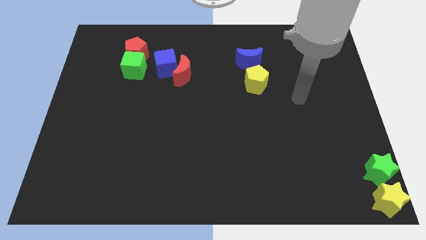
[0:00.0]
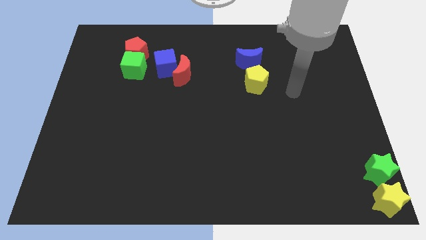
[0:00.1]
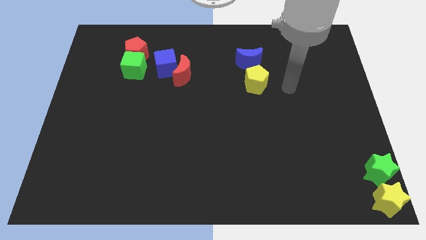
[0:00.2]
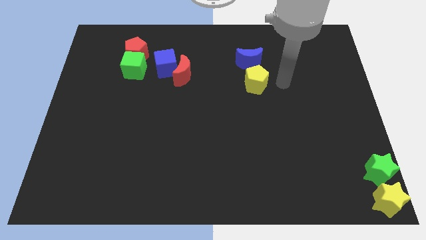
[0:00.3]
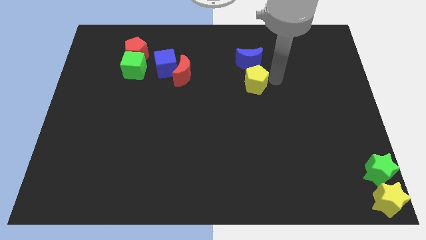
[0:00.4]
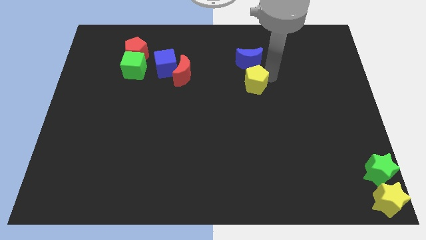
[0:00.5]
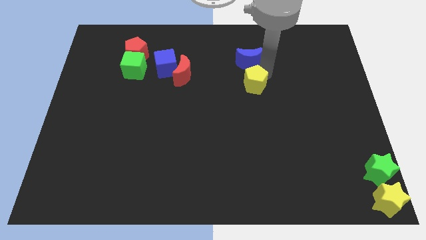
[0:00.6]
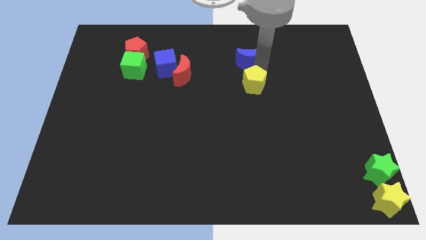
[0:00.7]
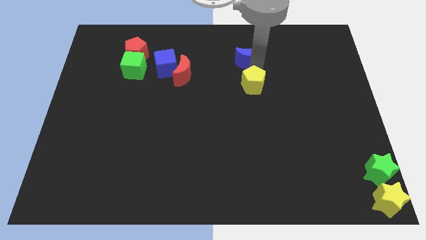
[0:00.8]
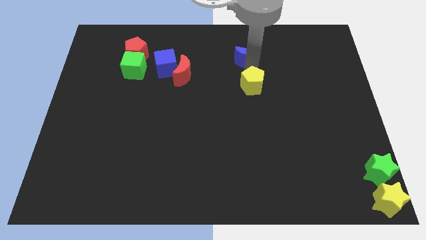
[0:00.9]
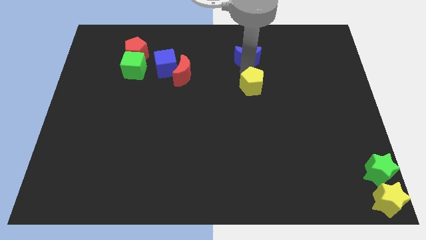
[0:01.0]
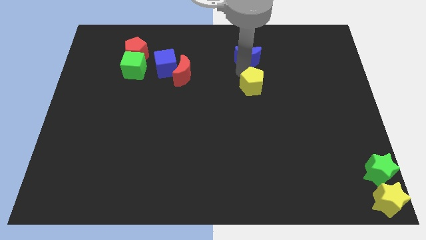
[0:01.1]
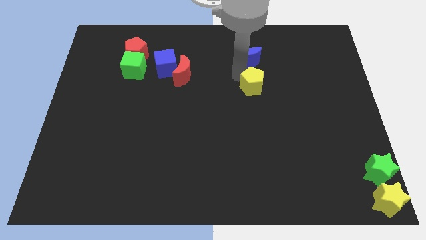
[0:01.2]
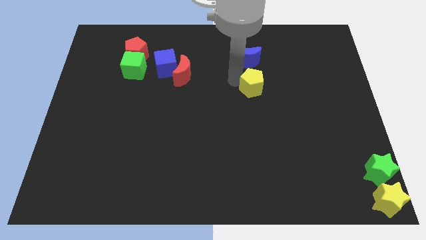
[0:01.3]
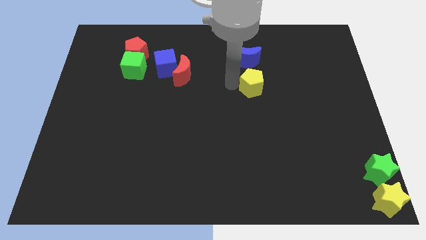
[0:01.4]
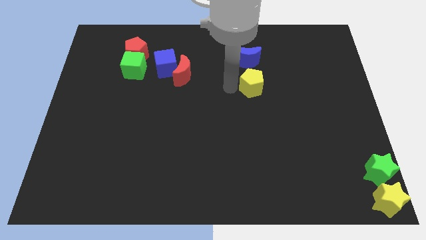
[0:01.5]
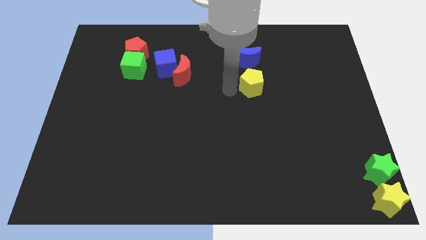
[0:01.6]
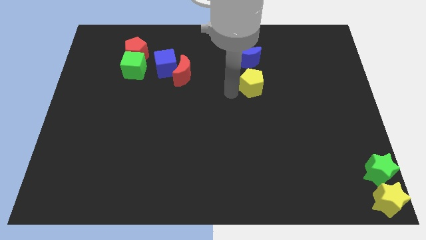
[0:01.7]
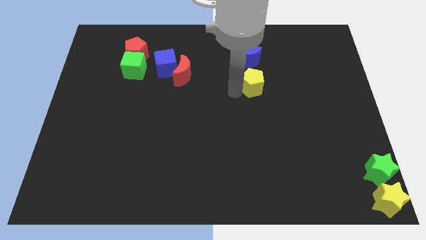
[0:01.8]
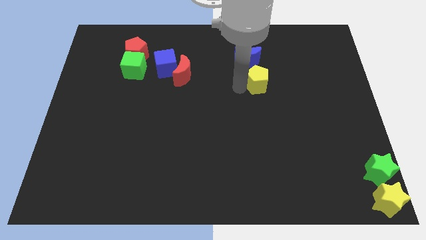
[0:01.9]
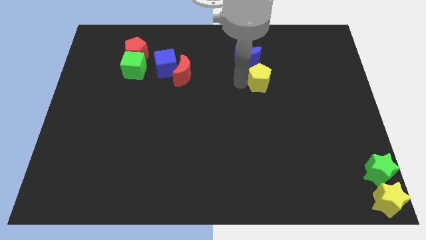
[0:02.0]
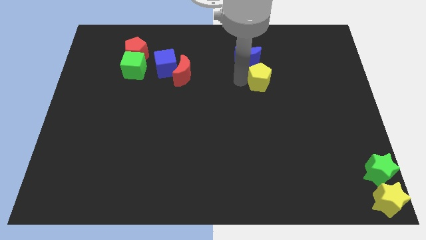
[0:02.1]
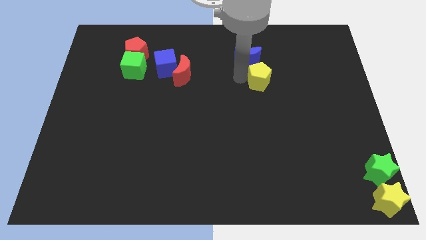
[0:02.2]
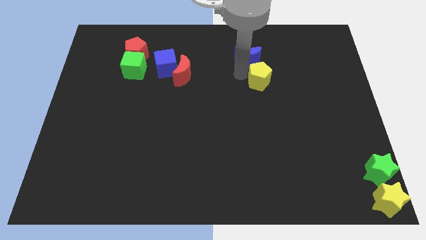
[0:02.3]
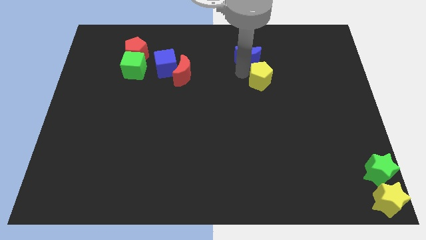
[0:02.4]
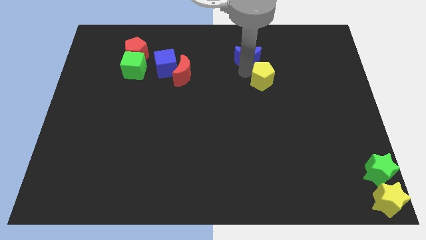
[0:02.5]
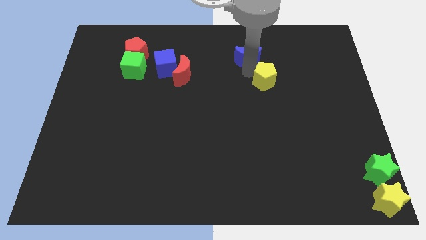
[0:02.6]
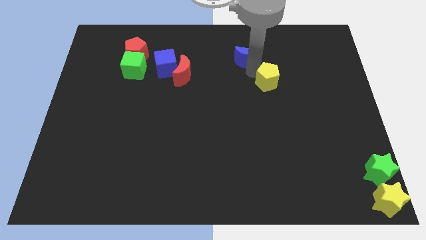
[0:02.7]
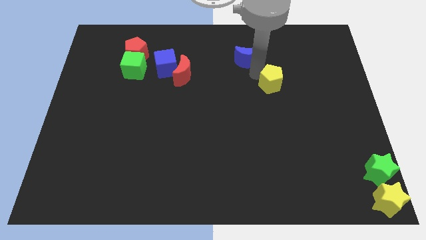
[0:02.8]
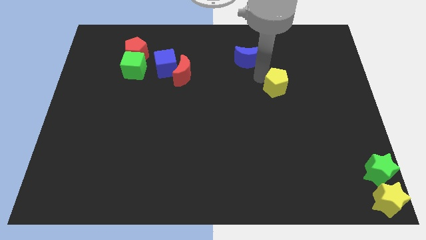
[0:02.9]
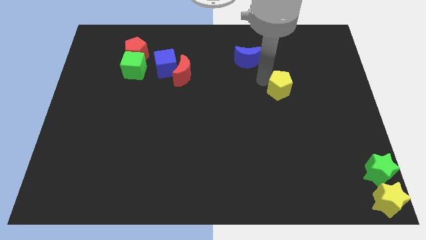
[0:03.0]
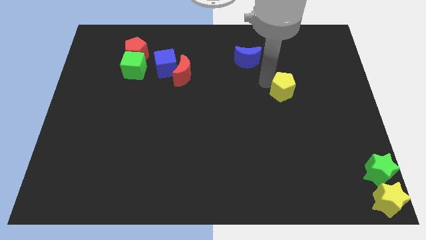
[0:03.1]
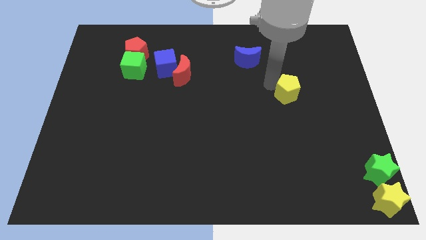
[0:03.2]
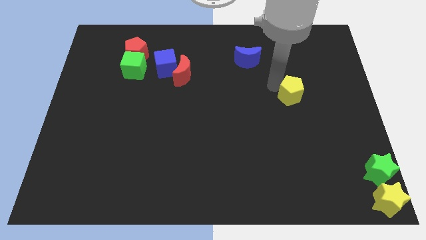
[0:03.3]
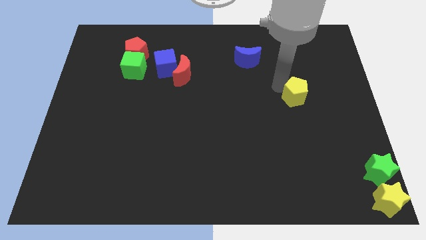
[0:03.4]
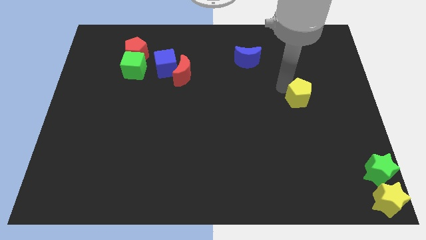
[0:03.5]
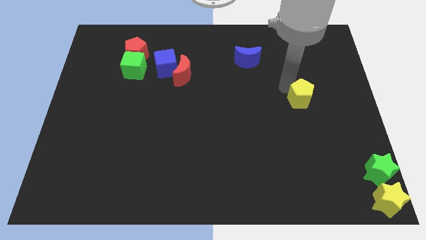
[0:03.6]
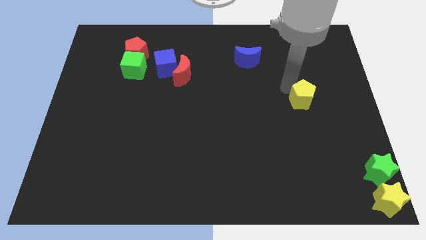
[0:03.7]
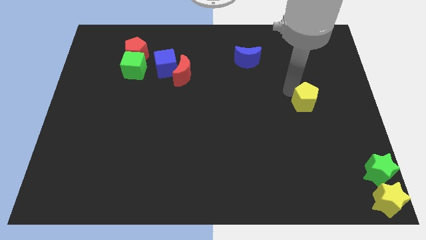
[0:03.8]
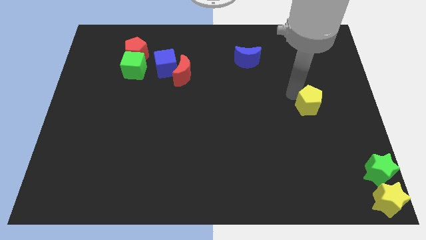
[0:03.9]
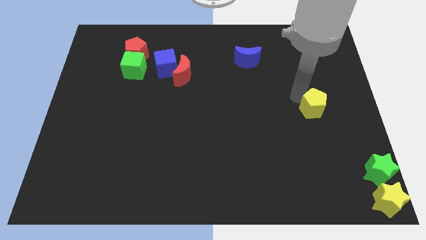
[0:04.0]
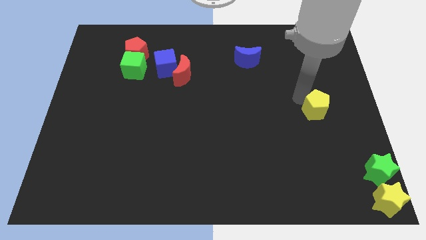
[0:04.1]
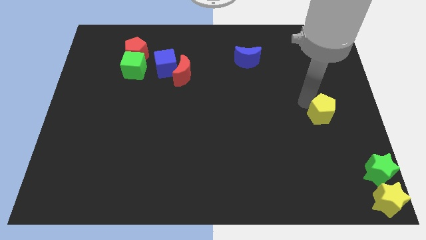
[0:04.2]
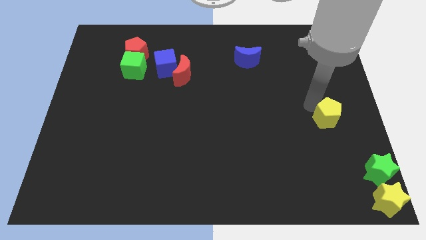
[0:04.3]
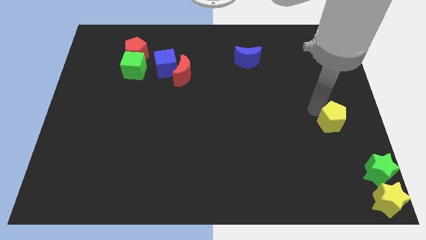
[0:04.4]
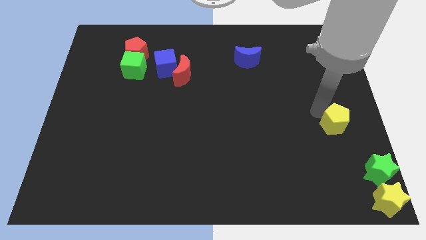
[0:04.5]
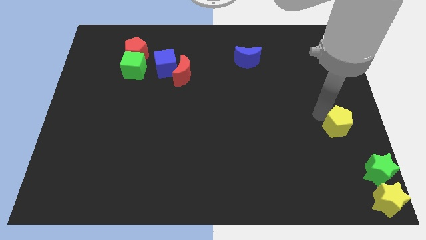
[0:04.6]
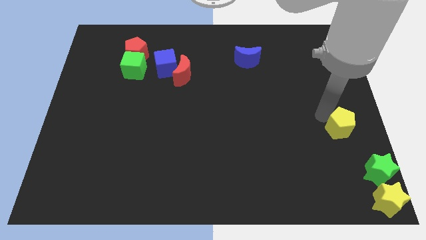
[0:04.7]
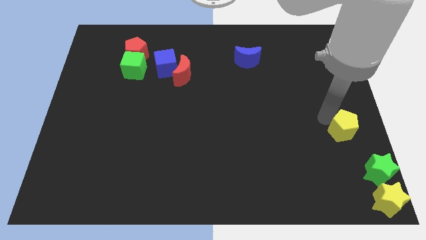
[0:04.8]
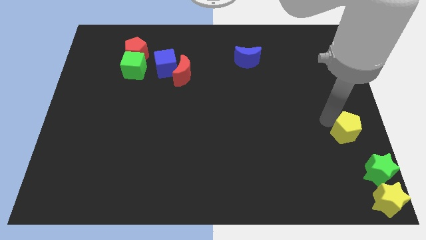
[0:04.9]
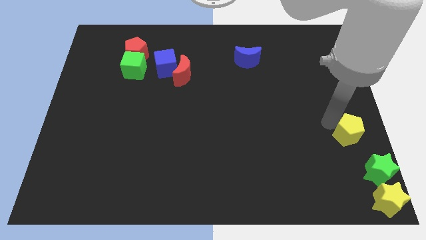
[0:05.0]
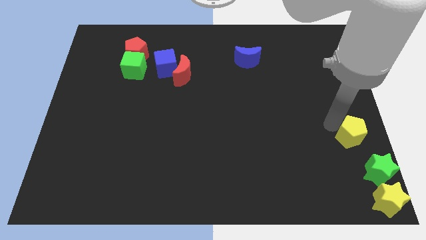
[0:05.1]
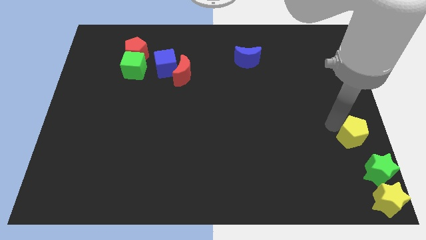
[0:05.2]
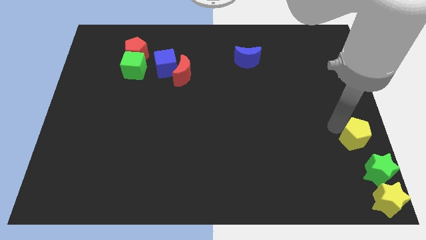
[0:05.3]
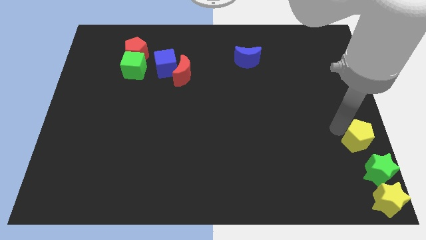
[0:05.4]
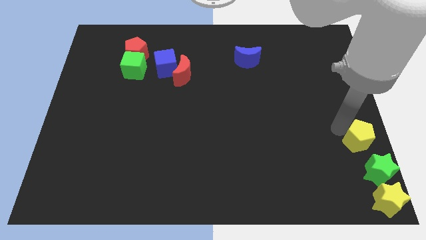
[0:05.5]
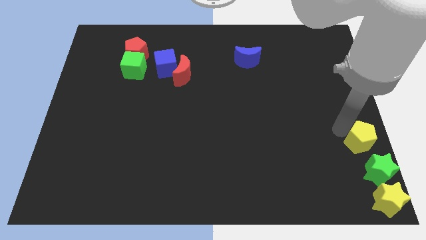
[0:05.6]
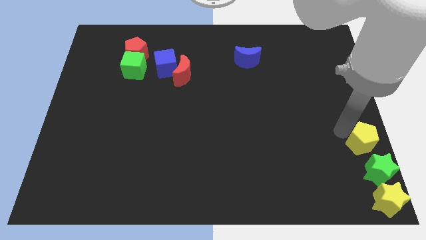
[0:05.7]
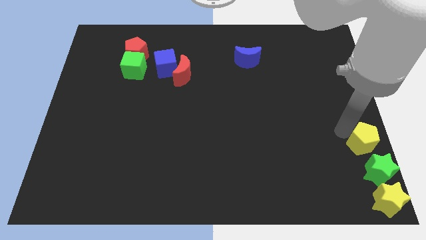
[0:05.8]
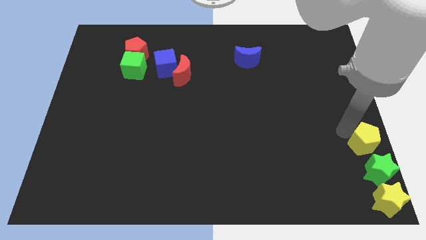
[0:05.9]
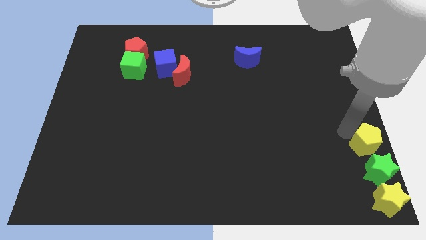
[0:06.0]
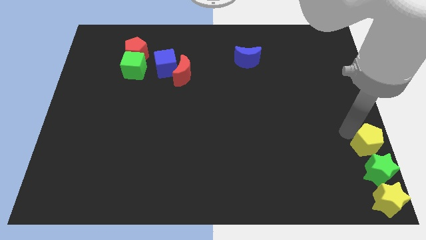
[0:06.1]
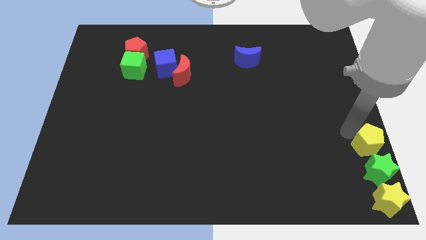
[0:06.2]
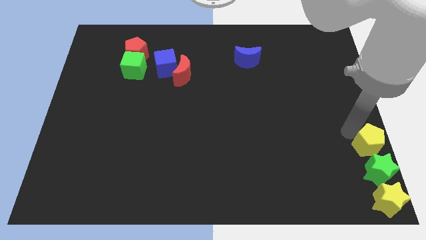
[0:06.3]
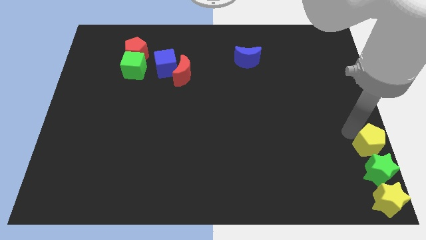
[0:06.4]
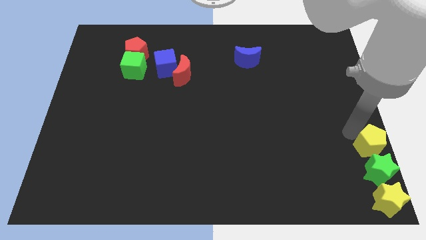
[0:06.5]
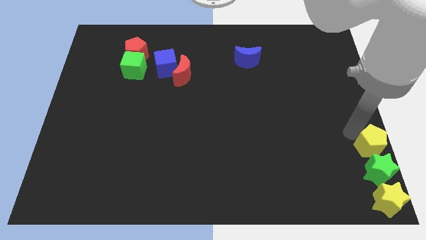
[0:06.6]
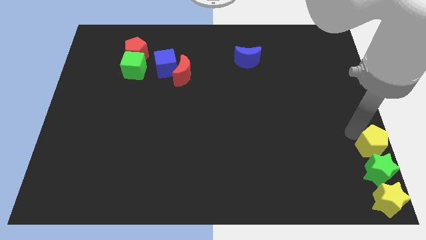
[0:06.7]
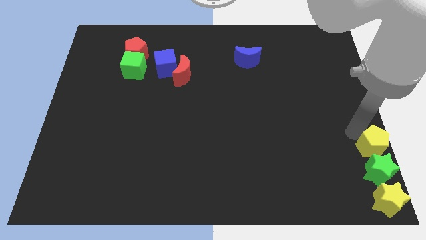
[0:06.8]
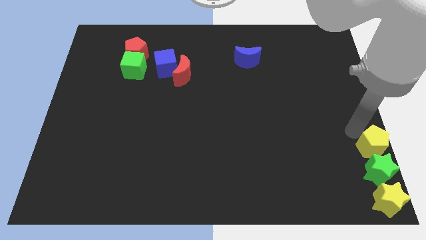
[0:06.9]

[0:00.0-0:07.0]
push the yellow pentagon to the top of the green star along with the right side edge of the board

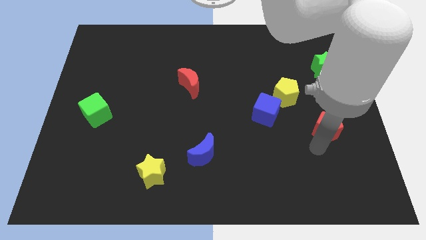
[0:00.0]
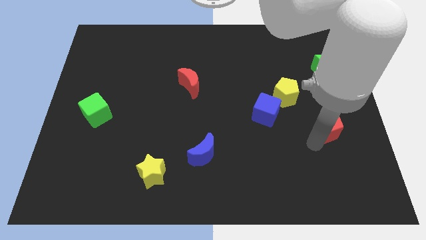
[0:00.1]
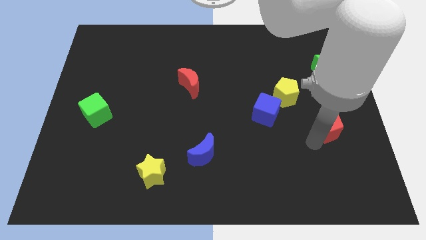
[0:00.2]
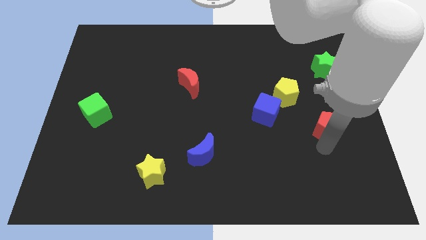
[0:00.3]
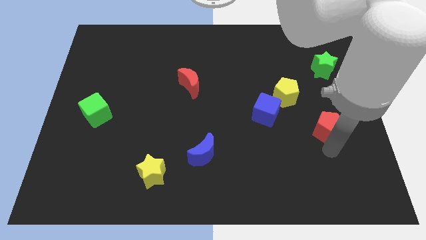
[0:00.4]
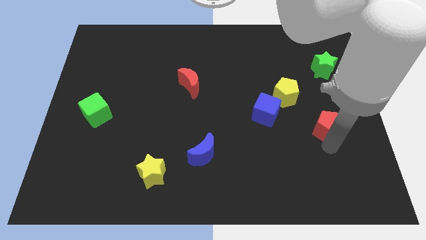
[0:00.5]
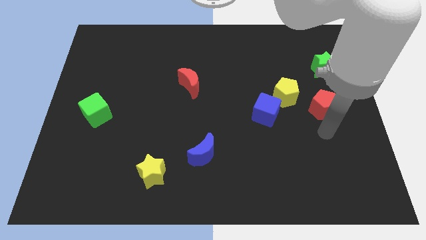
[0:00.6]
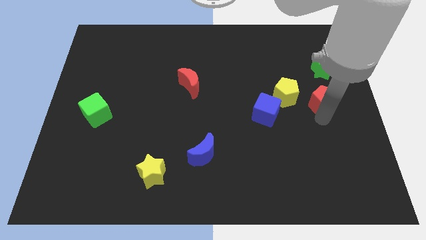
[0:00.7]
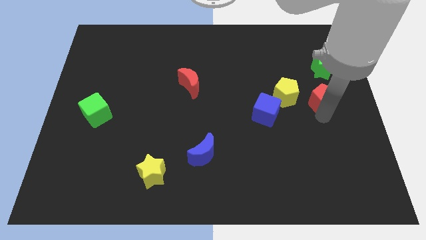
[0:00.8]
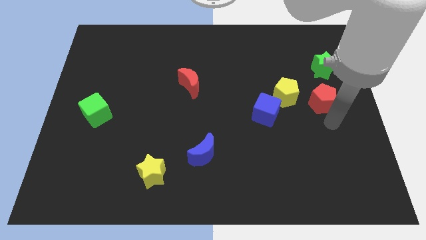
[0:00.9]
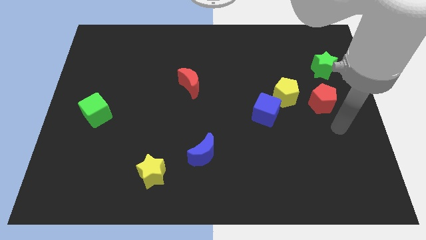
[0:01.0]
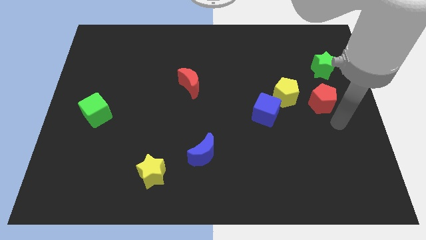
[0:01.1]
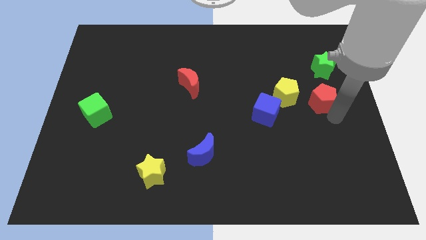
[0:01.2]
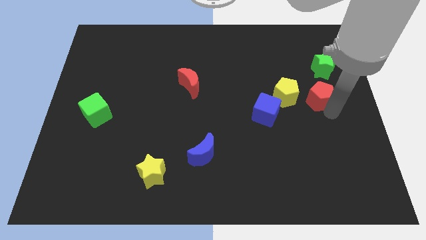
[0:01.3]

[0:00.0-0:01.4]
put the red pentagon right to the yellow pentagon

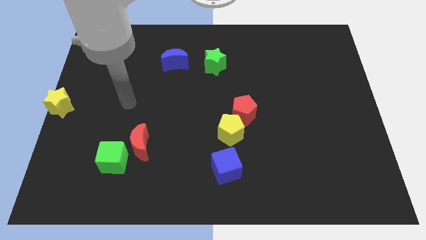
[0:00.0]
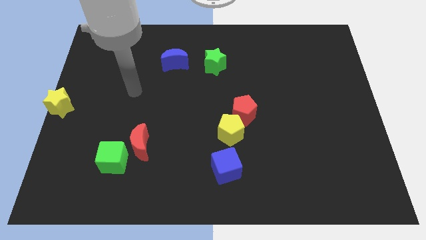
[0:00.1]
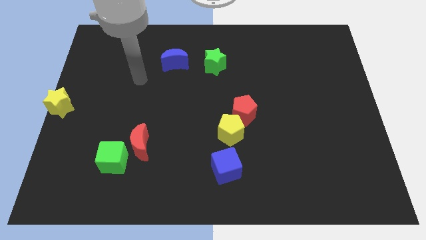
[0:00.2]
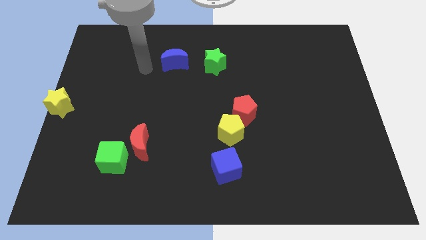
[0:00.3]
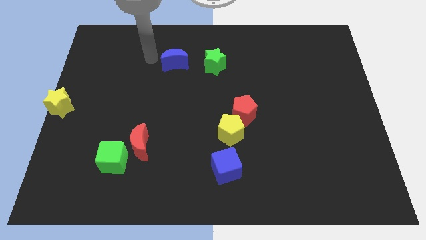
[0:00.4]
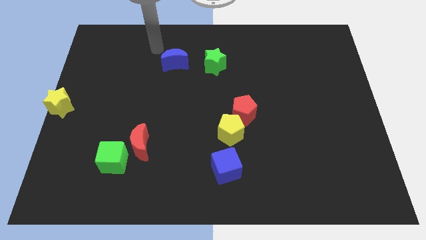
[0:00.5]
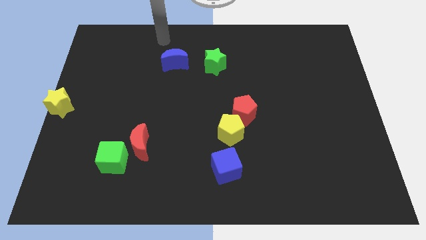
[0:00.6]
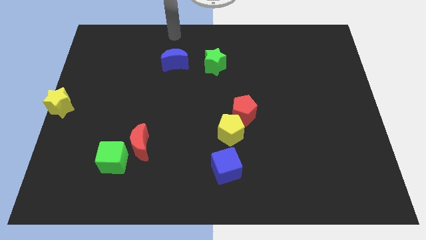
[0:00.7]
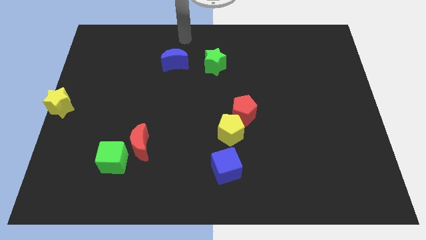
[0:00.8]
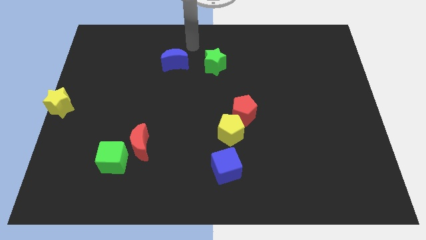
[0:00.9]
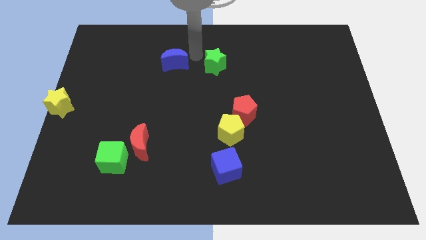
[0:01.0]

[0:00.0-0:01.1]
move your arm to the top of blue crescent
